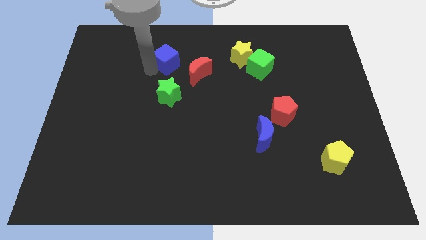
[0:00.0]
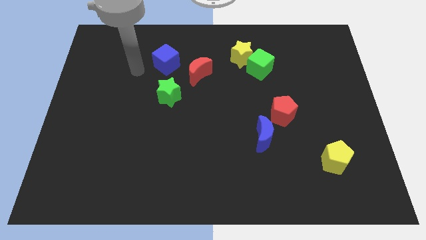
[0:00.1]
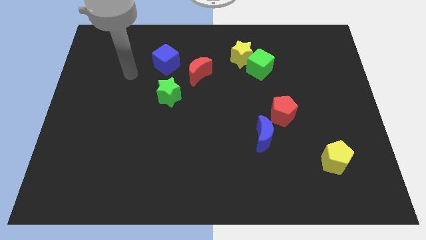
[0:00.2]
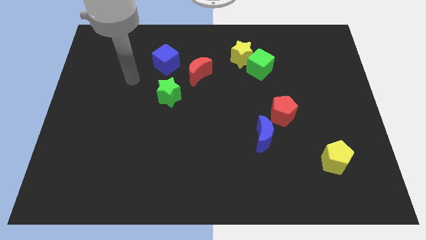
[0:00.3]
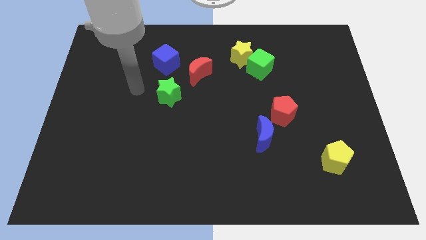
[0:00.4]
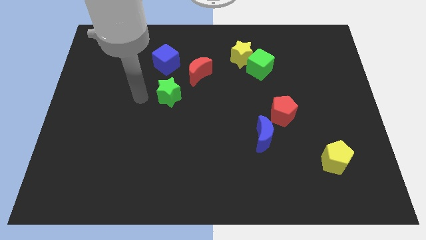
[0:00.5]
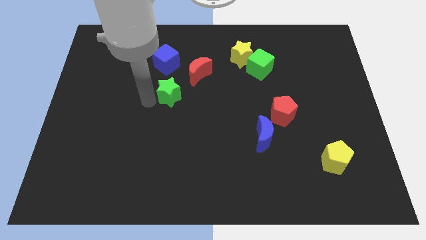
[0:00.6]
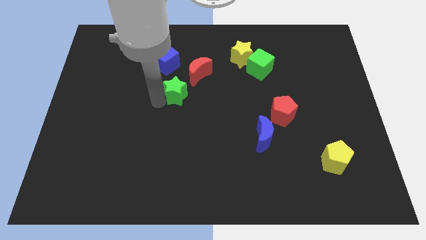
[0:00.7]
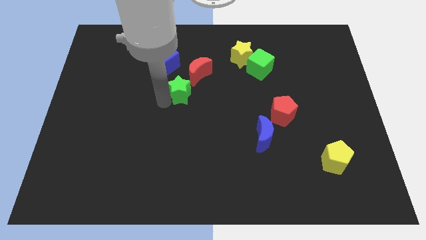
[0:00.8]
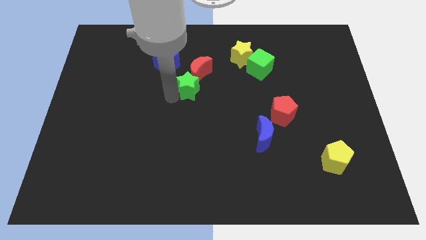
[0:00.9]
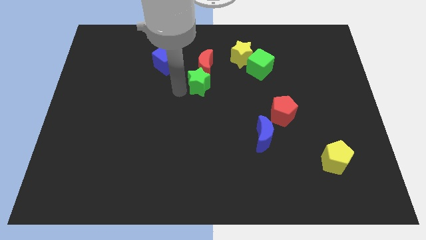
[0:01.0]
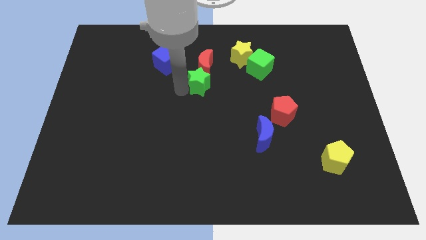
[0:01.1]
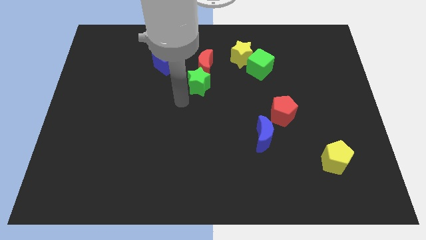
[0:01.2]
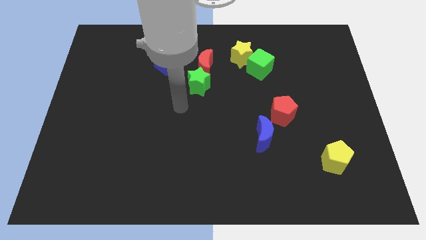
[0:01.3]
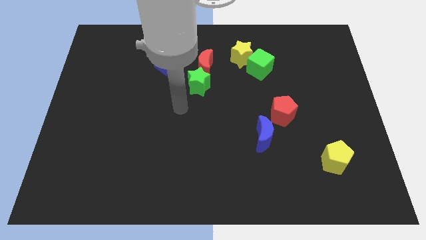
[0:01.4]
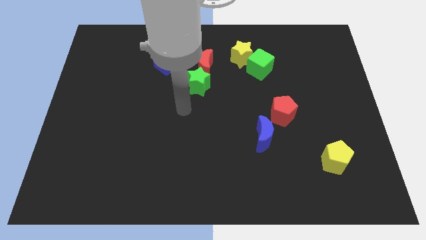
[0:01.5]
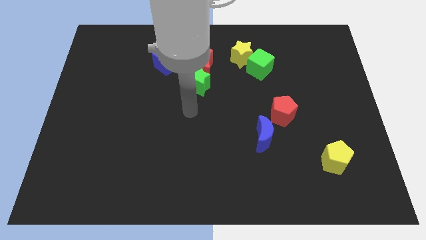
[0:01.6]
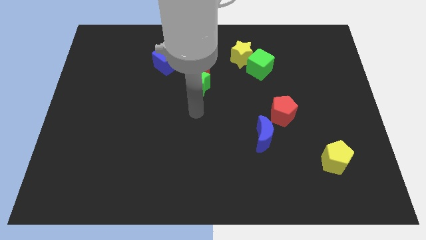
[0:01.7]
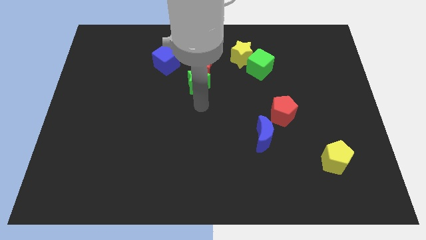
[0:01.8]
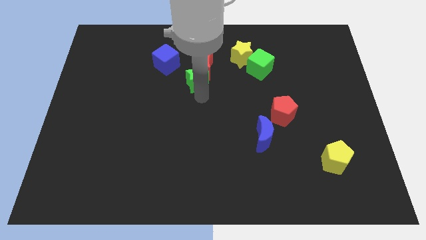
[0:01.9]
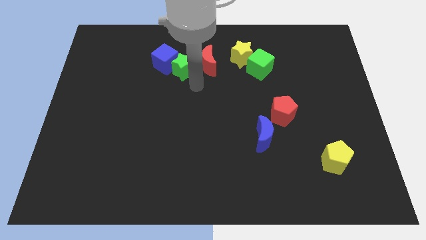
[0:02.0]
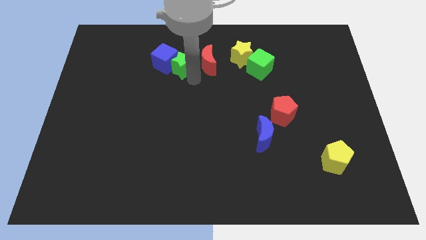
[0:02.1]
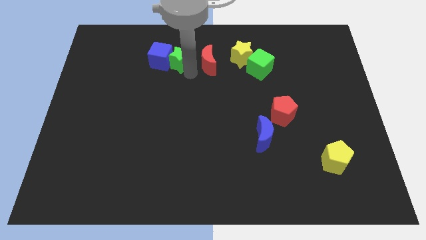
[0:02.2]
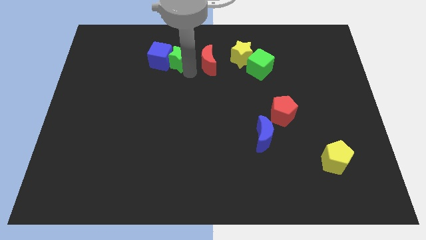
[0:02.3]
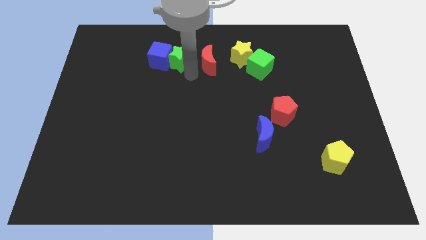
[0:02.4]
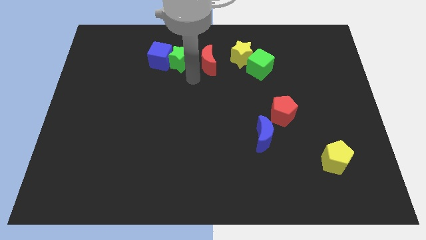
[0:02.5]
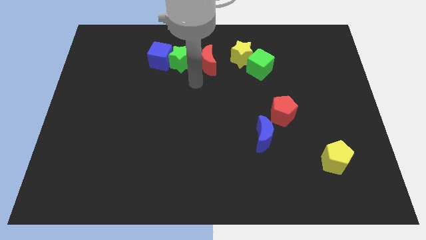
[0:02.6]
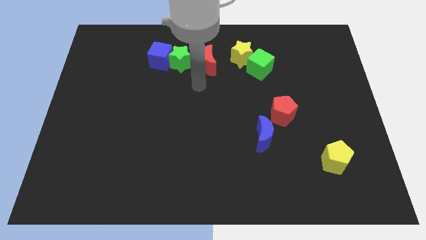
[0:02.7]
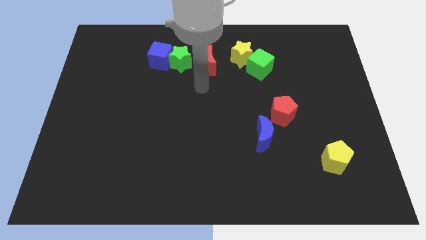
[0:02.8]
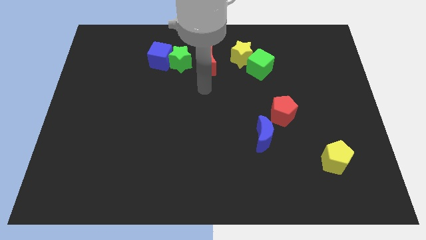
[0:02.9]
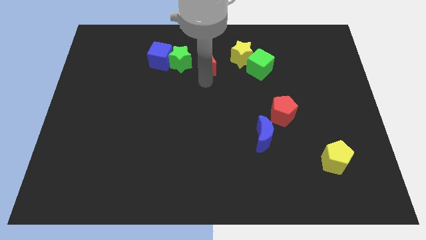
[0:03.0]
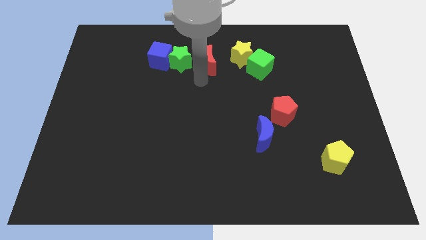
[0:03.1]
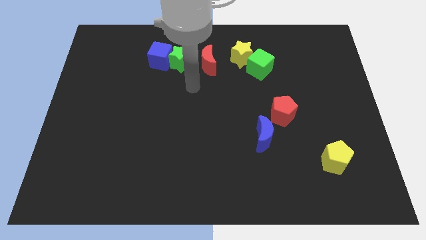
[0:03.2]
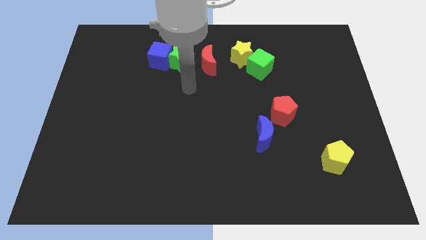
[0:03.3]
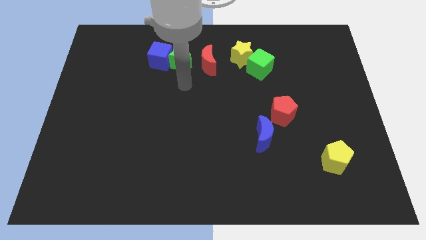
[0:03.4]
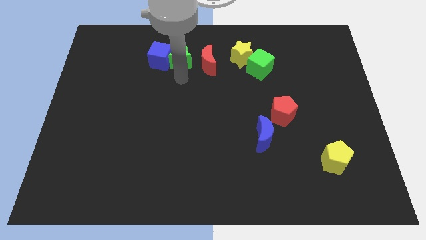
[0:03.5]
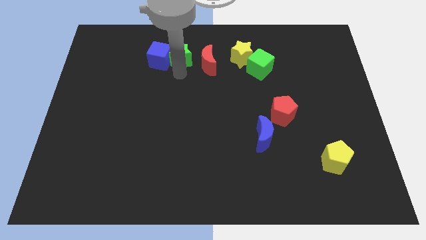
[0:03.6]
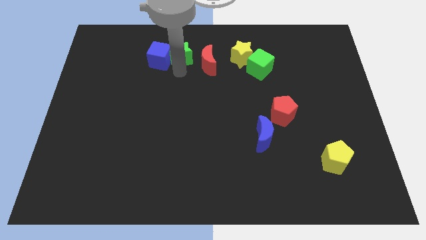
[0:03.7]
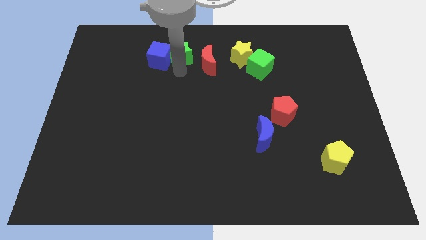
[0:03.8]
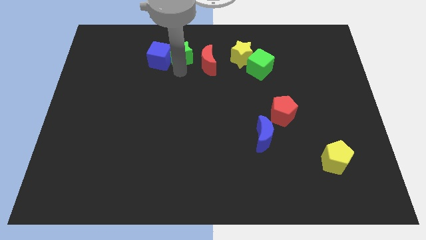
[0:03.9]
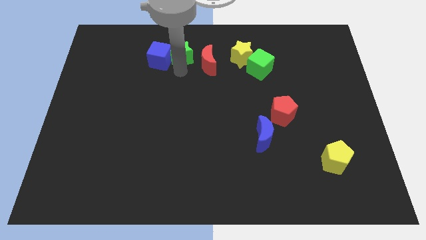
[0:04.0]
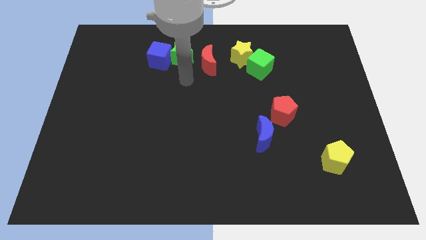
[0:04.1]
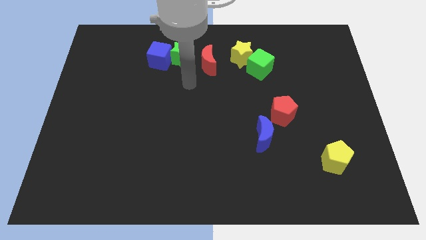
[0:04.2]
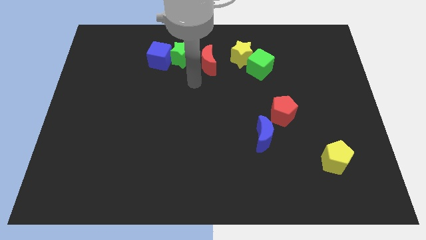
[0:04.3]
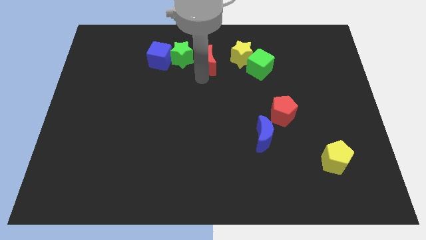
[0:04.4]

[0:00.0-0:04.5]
place the green star close to the right of the blue cube

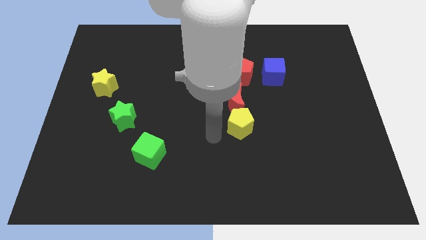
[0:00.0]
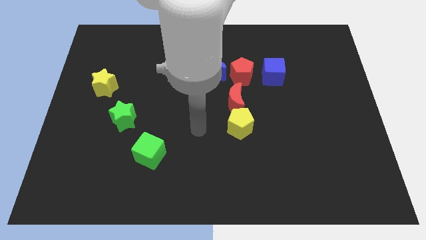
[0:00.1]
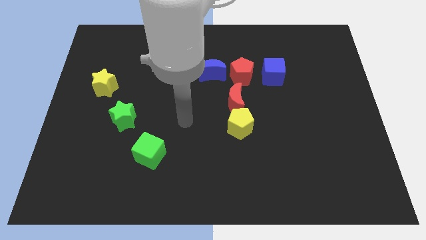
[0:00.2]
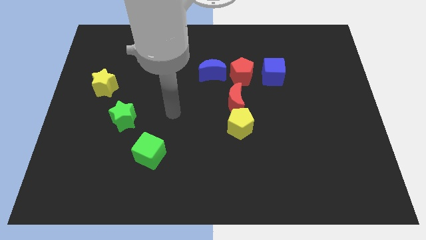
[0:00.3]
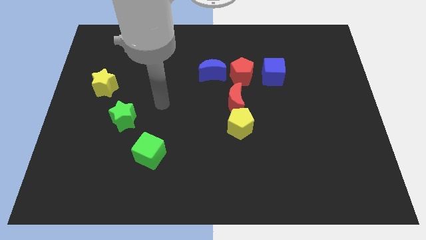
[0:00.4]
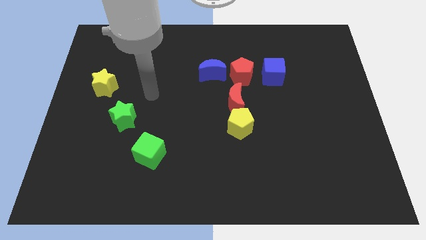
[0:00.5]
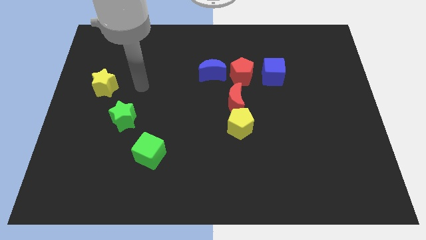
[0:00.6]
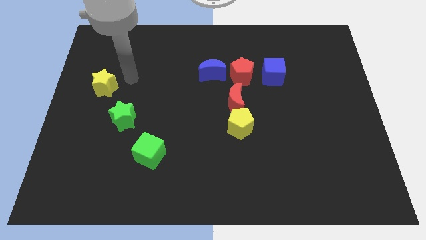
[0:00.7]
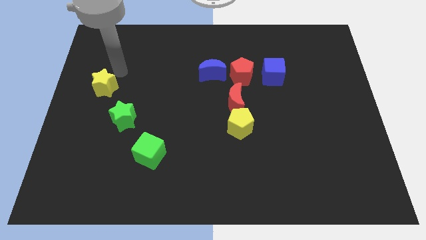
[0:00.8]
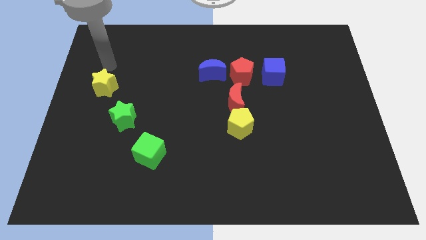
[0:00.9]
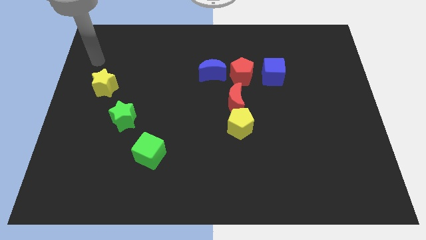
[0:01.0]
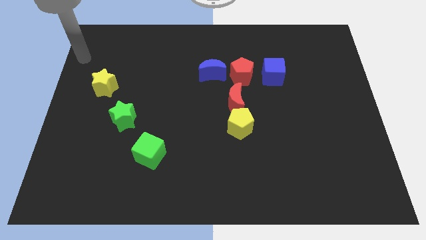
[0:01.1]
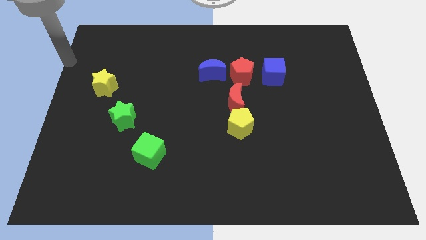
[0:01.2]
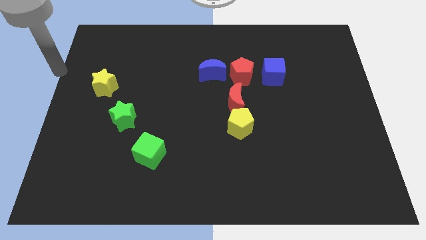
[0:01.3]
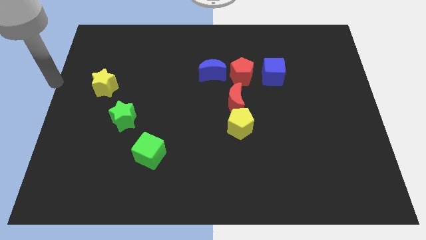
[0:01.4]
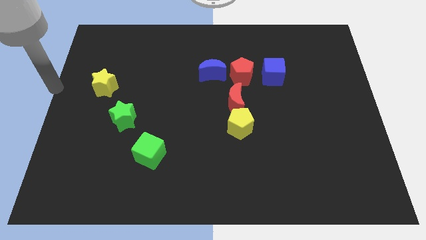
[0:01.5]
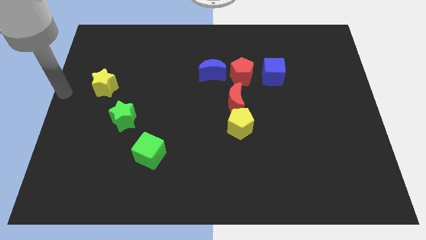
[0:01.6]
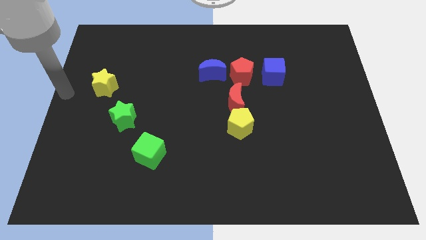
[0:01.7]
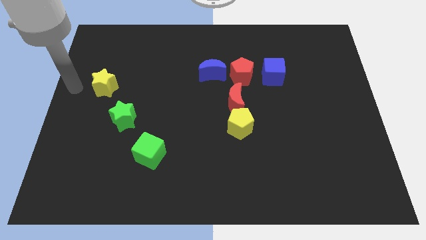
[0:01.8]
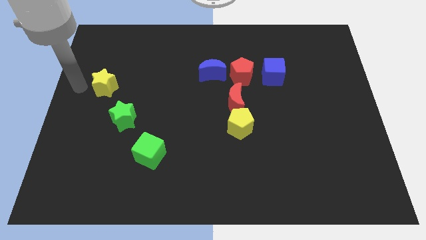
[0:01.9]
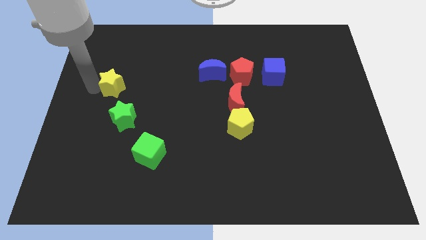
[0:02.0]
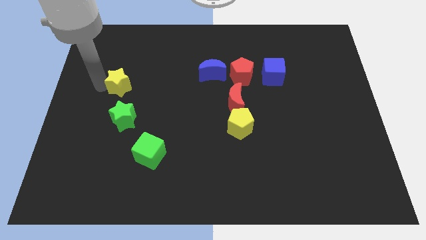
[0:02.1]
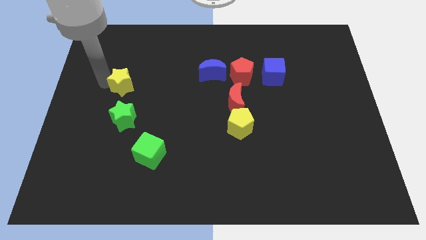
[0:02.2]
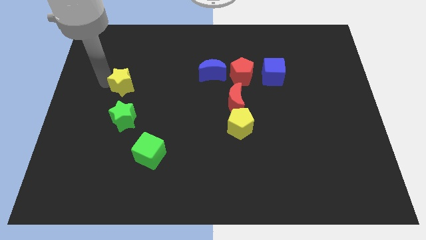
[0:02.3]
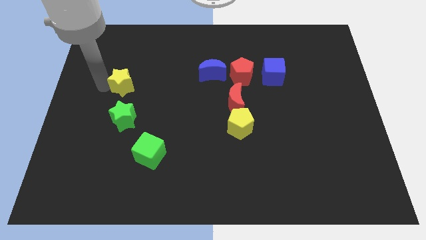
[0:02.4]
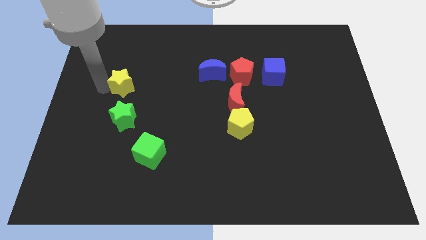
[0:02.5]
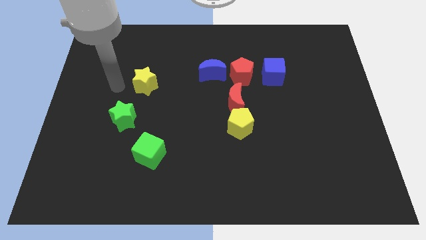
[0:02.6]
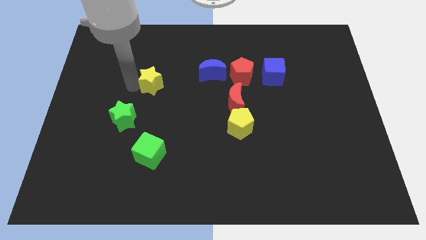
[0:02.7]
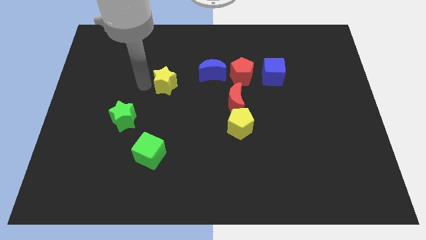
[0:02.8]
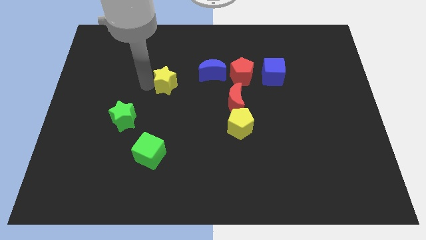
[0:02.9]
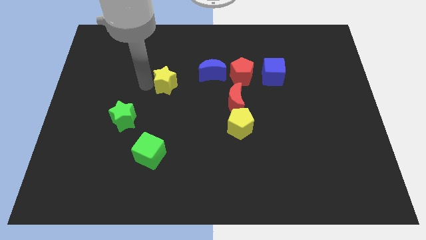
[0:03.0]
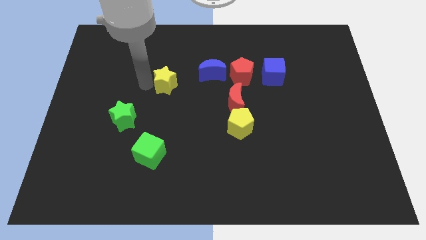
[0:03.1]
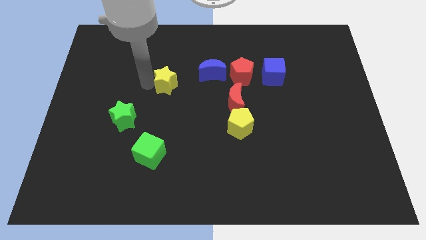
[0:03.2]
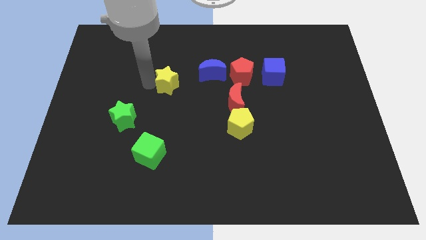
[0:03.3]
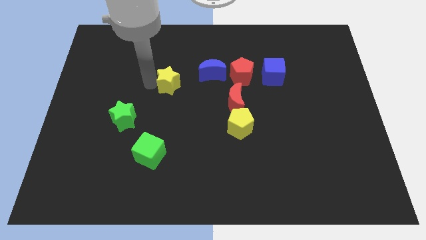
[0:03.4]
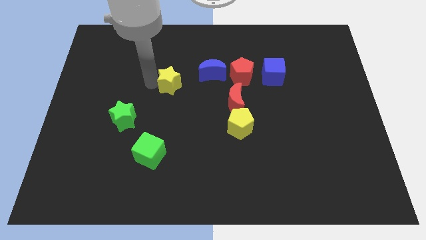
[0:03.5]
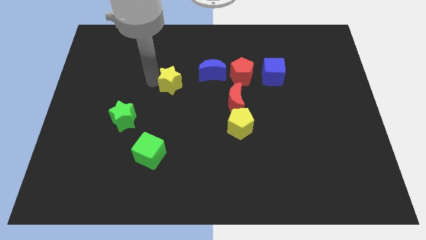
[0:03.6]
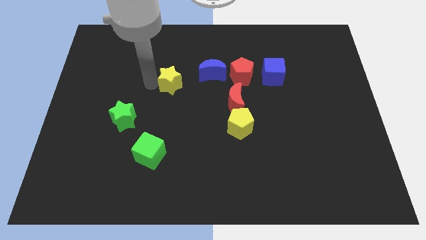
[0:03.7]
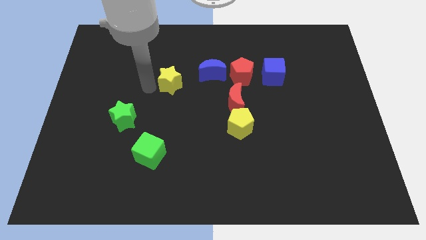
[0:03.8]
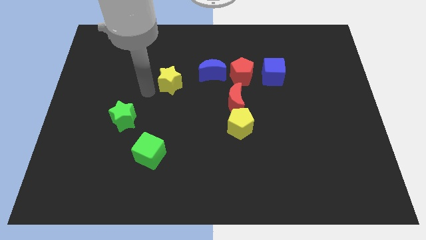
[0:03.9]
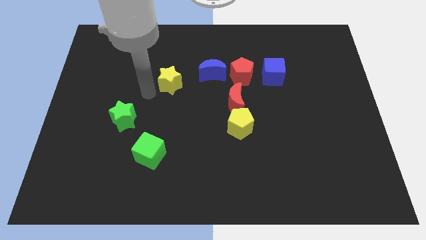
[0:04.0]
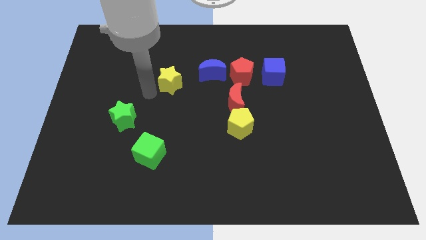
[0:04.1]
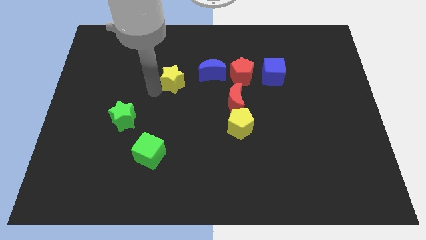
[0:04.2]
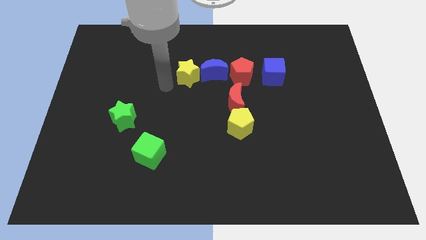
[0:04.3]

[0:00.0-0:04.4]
push the yellow star to the left of the blue crescent
